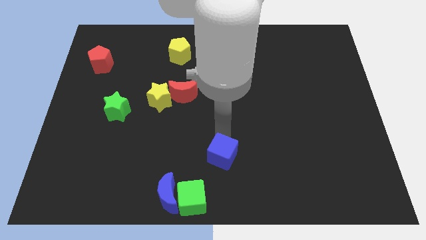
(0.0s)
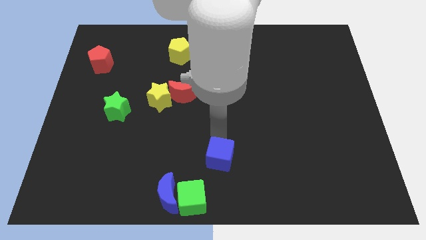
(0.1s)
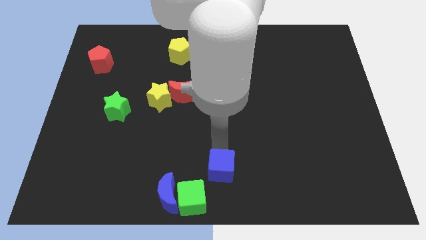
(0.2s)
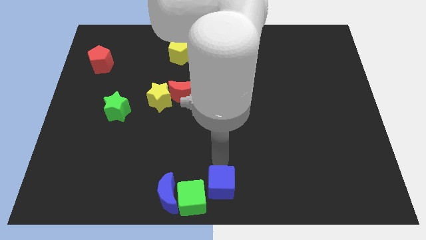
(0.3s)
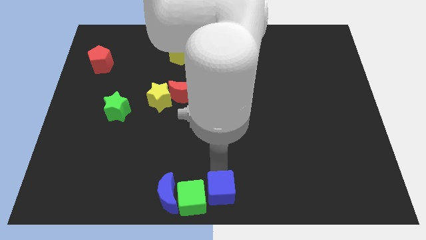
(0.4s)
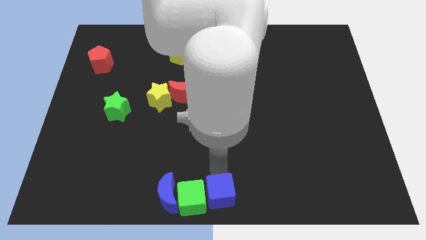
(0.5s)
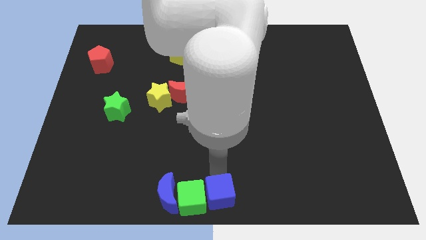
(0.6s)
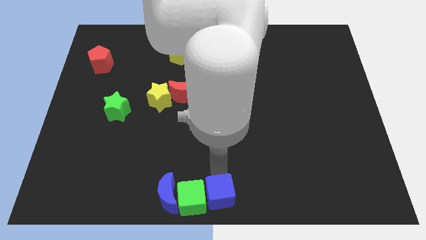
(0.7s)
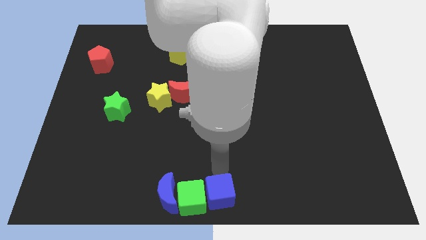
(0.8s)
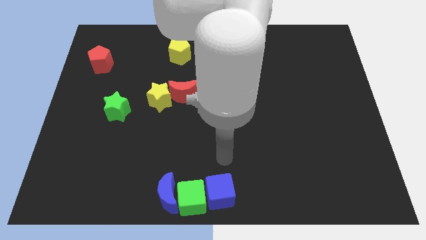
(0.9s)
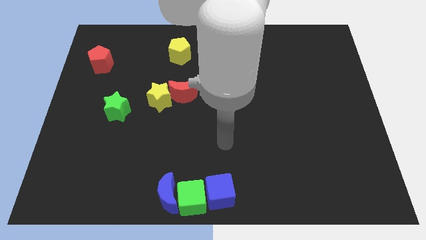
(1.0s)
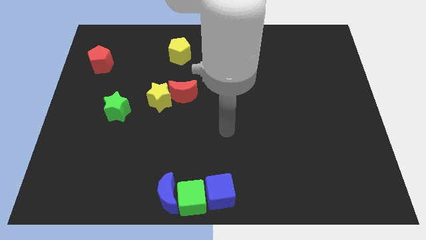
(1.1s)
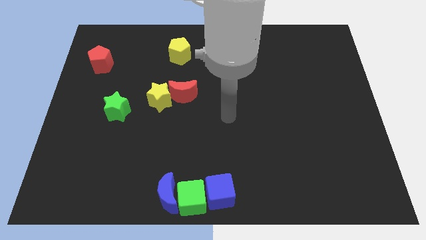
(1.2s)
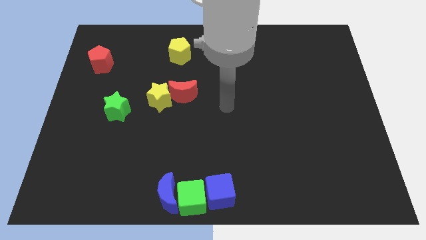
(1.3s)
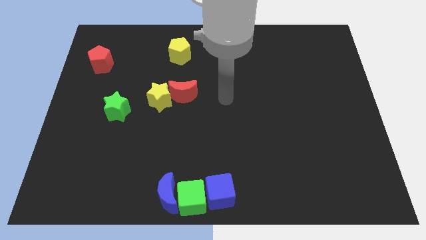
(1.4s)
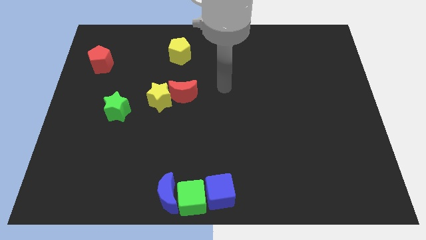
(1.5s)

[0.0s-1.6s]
place the blue cube to the right side of the green cube

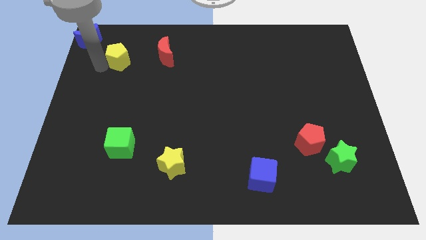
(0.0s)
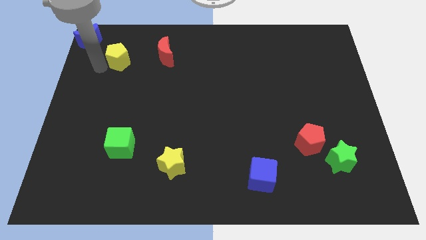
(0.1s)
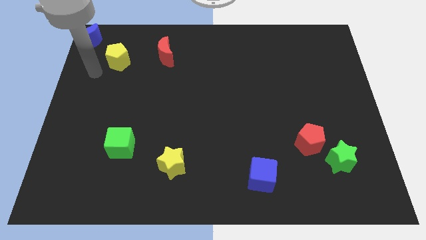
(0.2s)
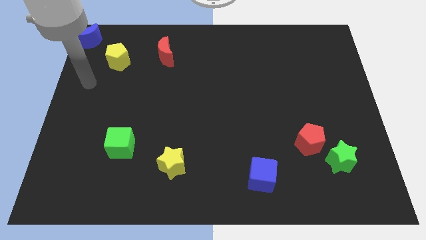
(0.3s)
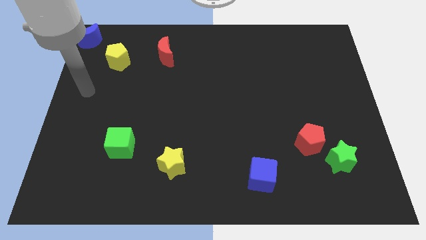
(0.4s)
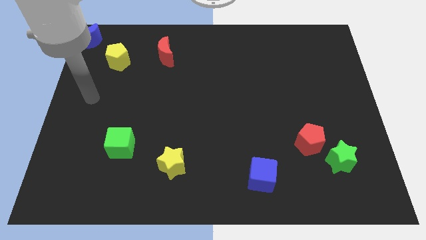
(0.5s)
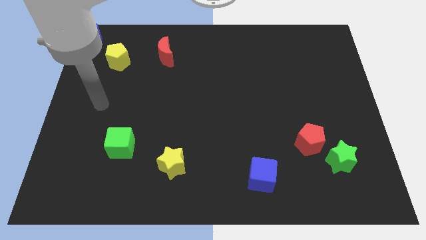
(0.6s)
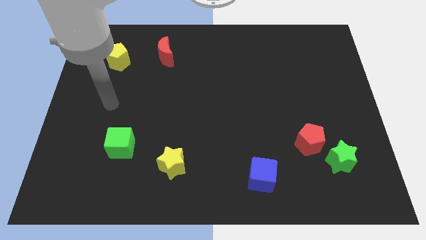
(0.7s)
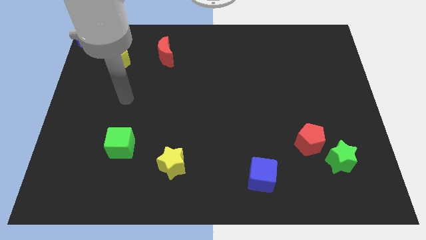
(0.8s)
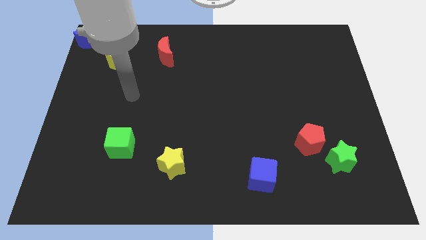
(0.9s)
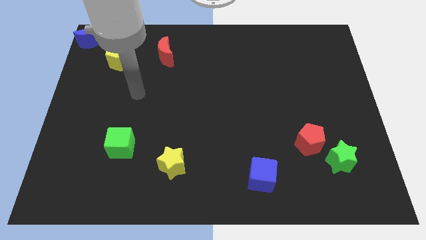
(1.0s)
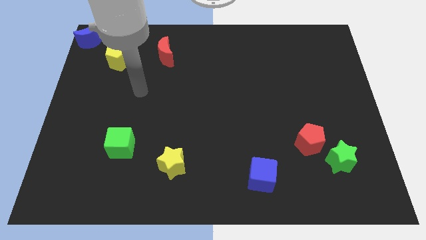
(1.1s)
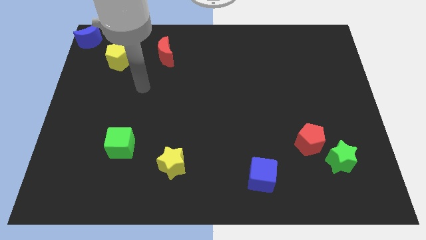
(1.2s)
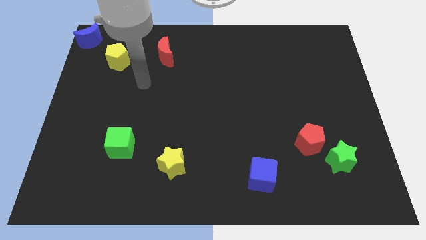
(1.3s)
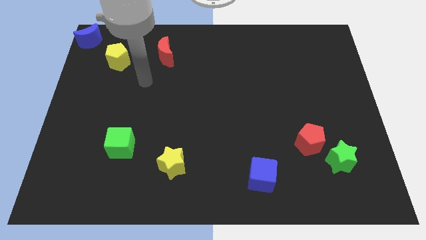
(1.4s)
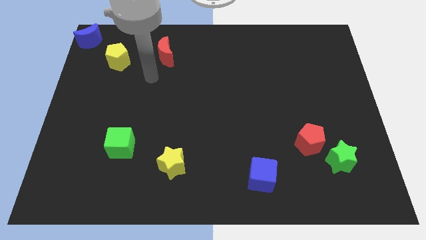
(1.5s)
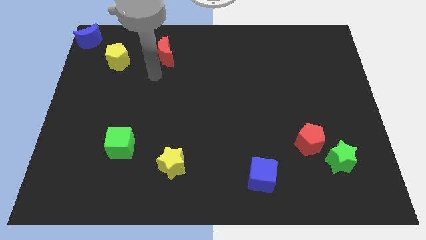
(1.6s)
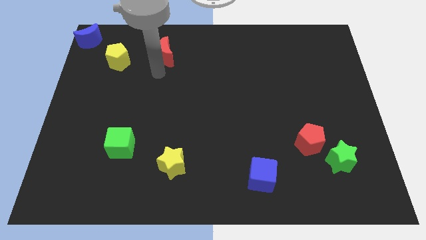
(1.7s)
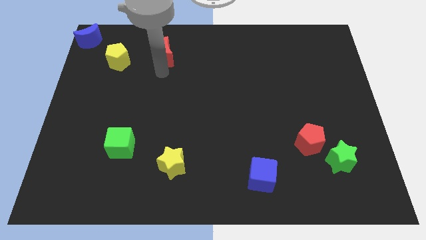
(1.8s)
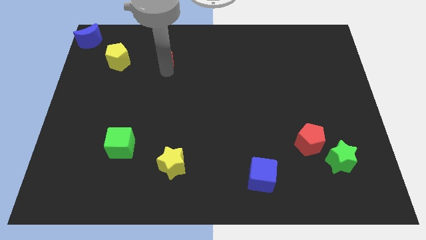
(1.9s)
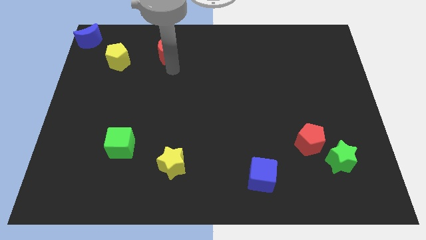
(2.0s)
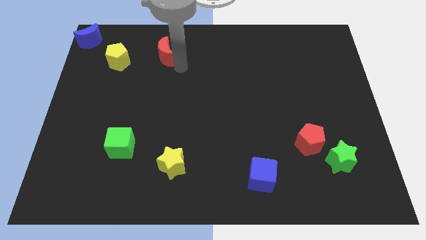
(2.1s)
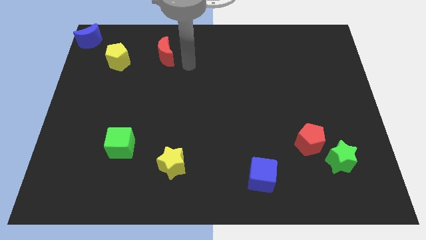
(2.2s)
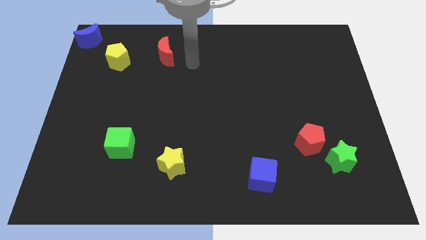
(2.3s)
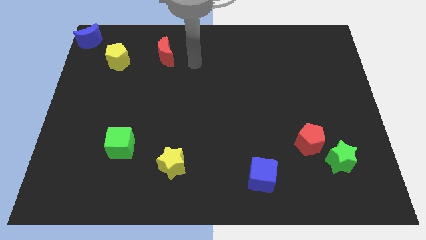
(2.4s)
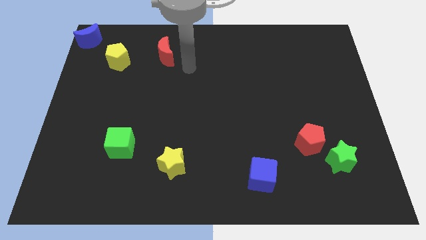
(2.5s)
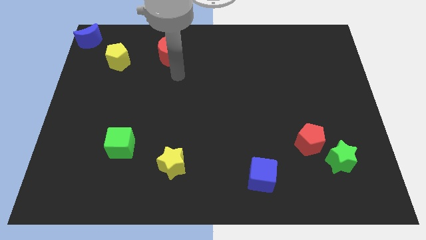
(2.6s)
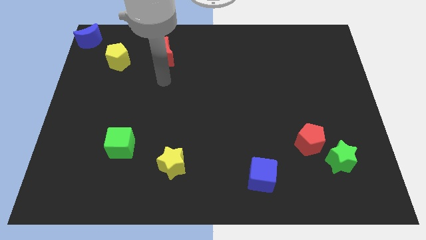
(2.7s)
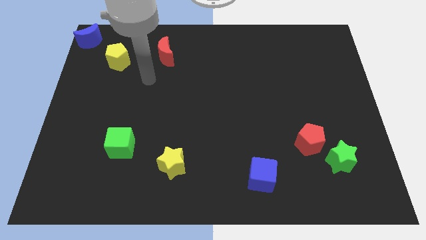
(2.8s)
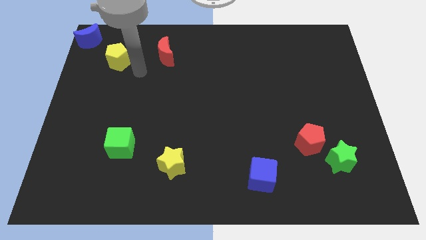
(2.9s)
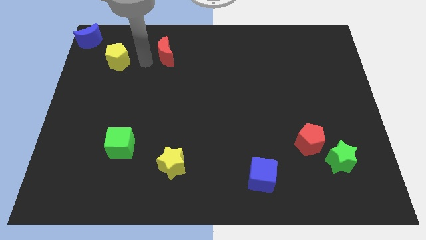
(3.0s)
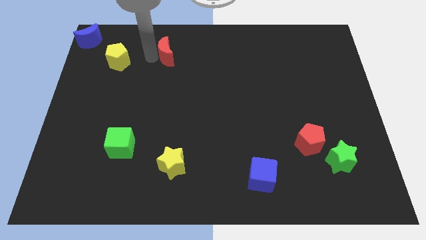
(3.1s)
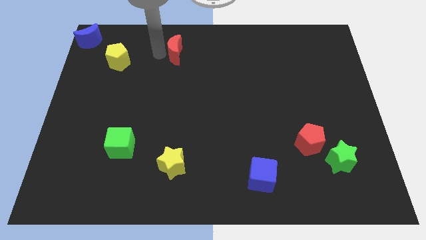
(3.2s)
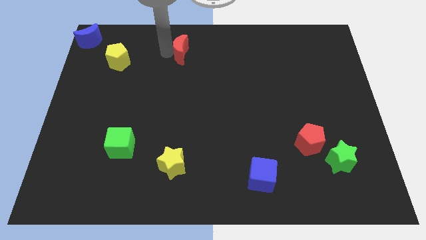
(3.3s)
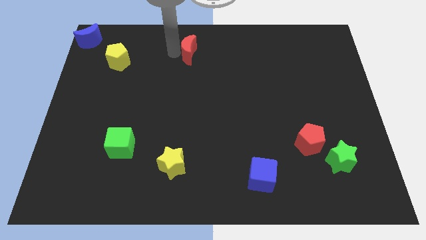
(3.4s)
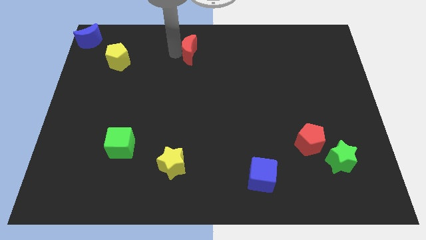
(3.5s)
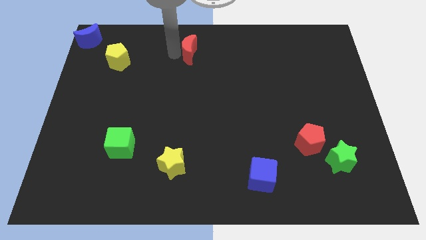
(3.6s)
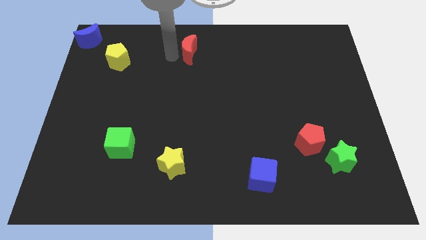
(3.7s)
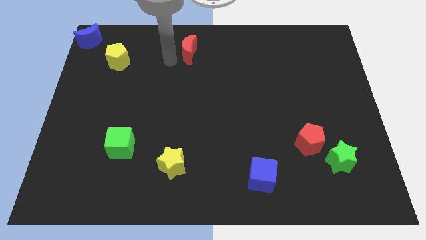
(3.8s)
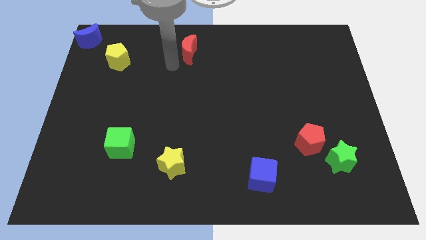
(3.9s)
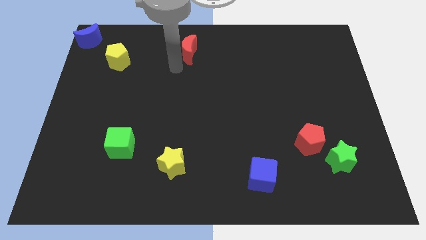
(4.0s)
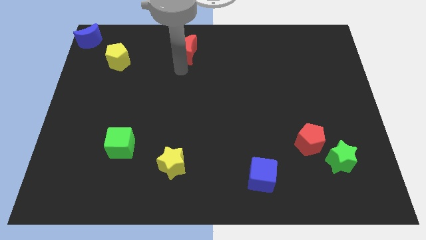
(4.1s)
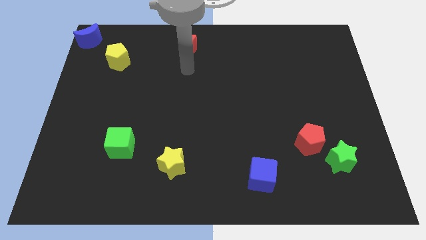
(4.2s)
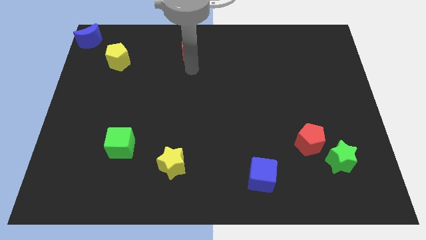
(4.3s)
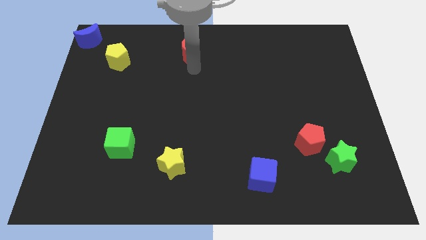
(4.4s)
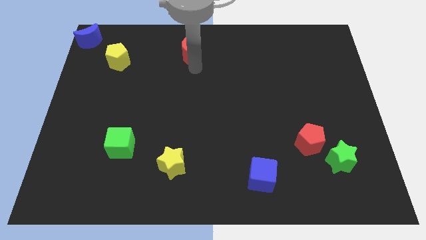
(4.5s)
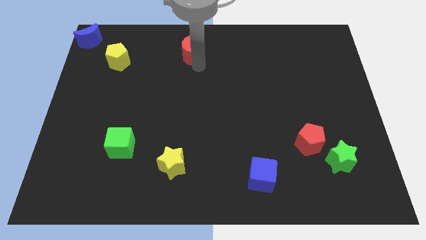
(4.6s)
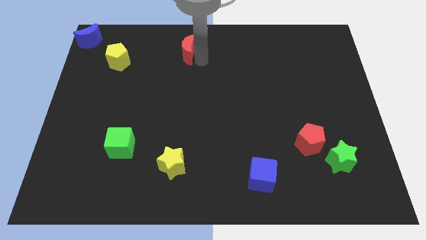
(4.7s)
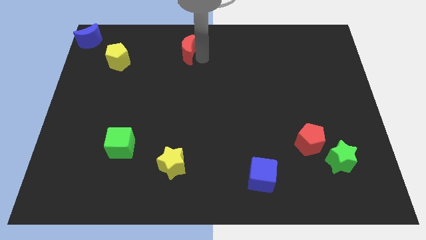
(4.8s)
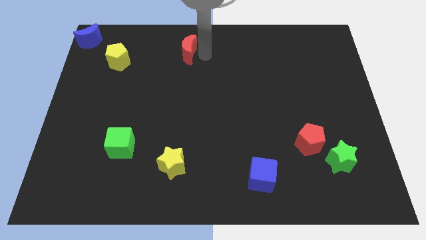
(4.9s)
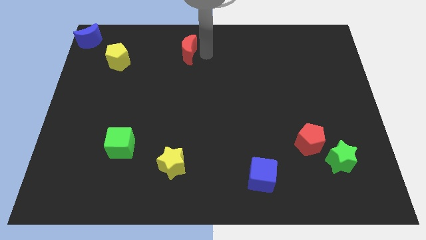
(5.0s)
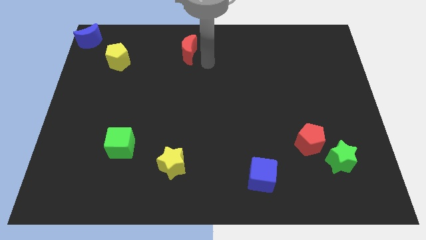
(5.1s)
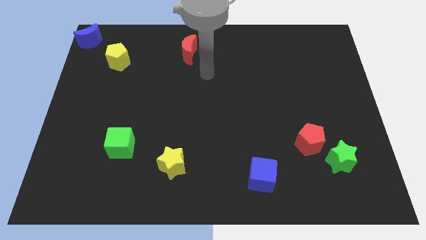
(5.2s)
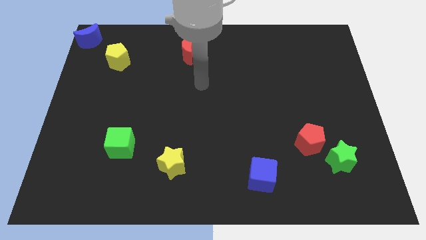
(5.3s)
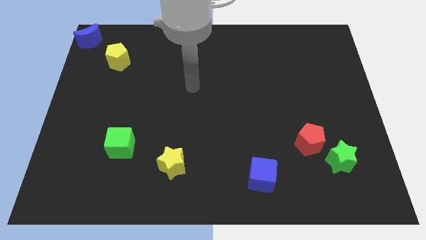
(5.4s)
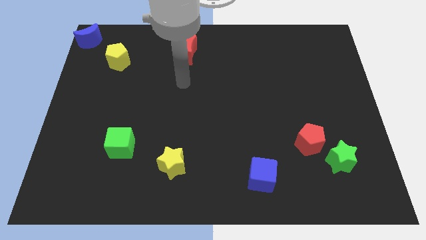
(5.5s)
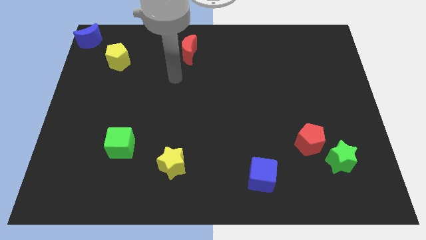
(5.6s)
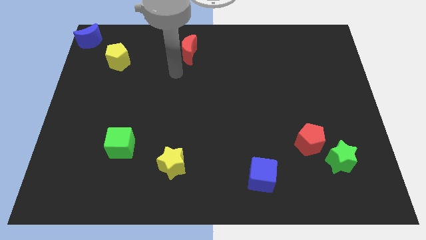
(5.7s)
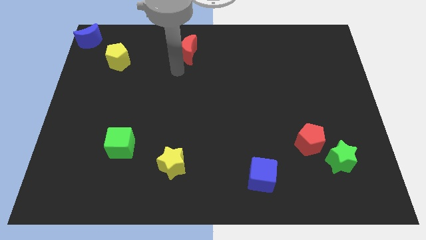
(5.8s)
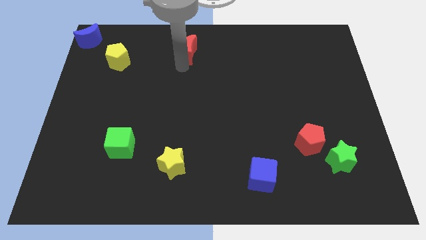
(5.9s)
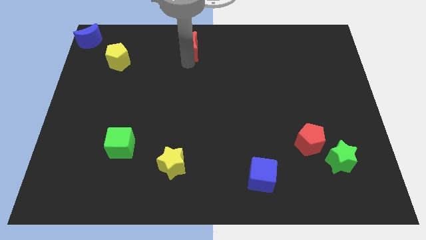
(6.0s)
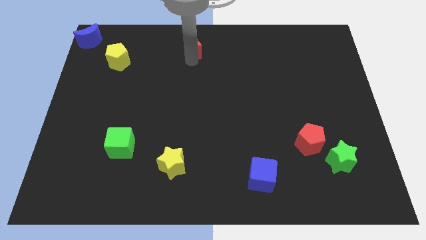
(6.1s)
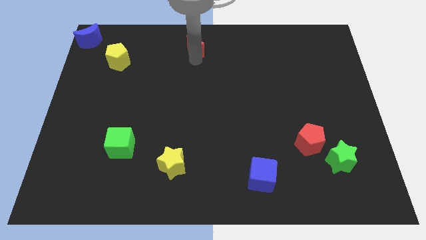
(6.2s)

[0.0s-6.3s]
push the red crescent slightly to the right

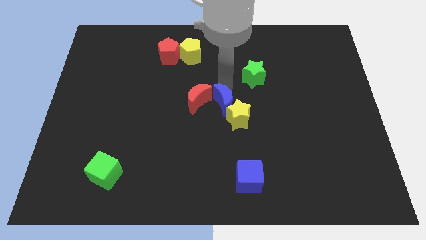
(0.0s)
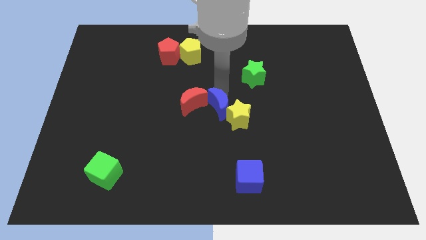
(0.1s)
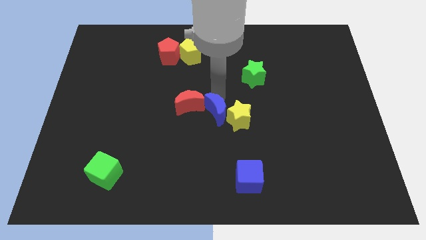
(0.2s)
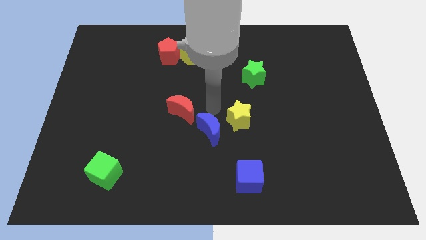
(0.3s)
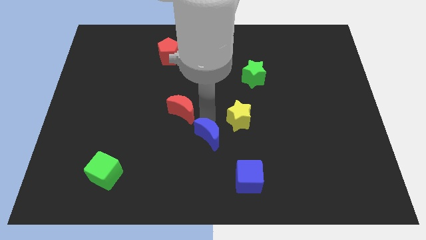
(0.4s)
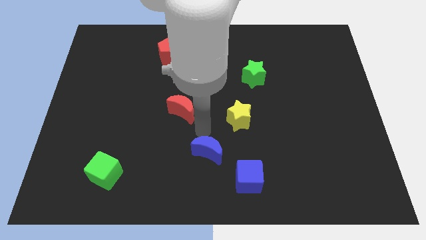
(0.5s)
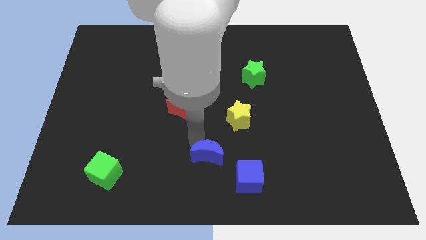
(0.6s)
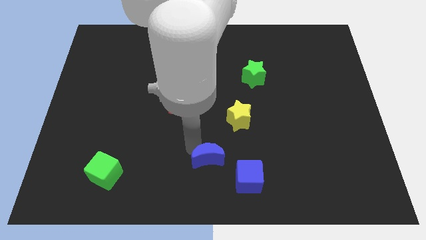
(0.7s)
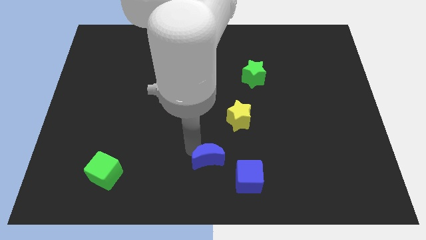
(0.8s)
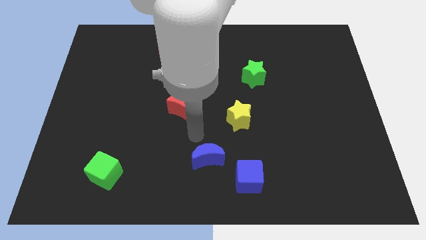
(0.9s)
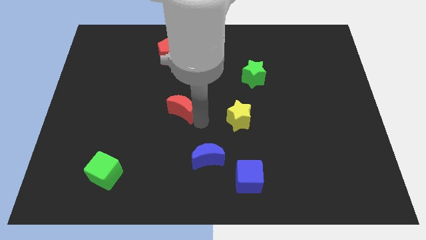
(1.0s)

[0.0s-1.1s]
place the blue moon diagonally to the top left of the blue cube

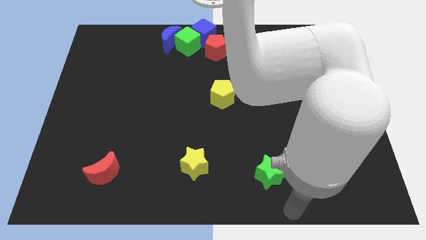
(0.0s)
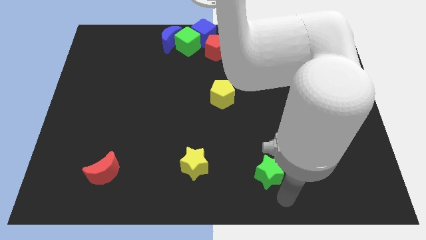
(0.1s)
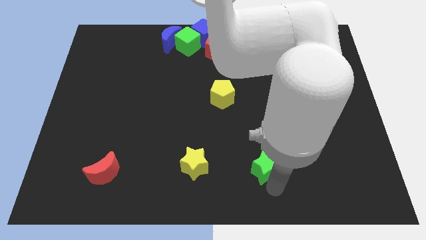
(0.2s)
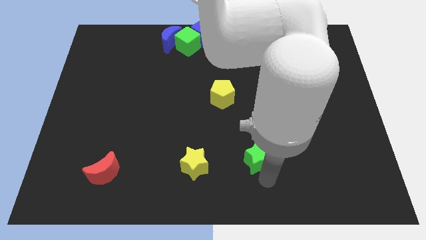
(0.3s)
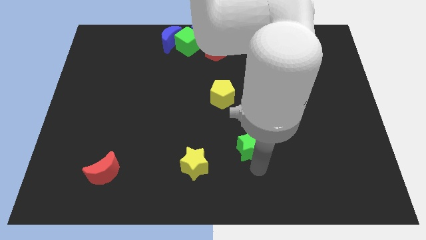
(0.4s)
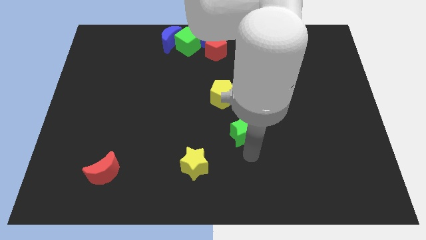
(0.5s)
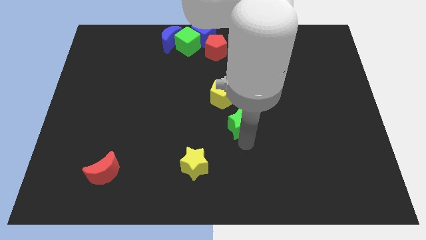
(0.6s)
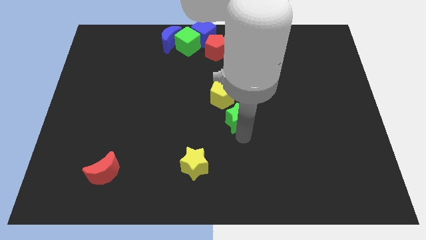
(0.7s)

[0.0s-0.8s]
place the green star below the yellow pentagon
